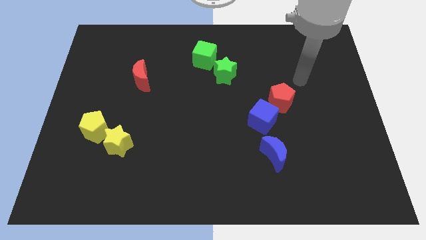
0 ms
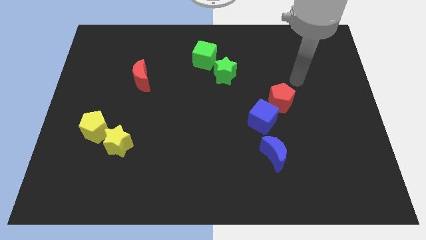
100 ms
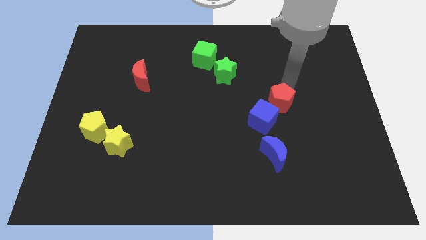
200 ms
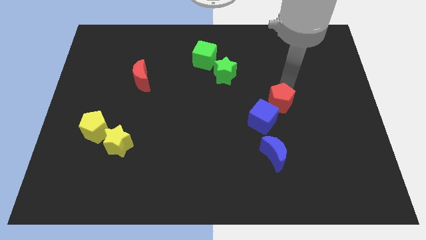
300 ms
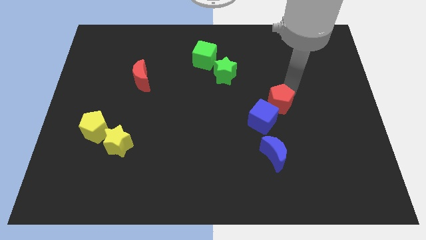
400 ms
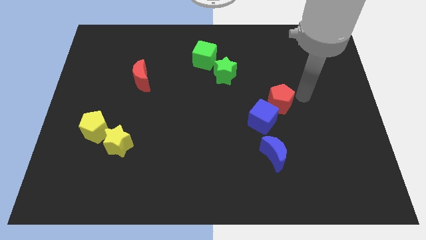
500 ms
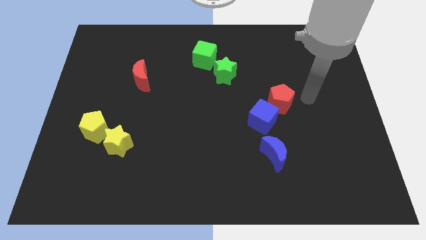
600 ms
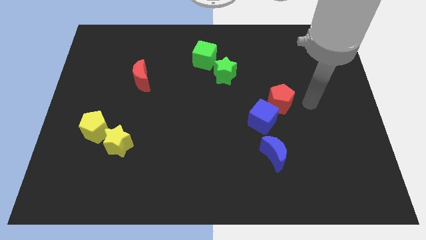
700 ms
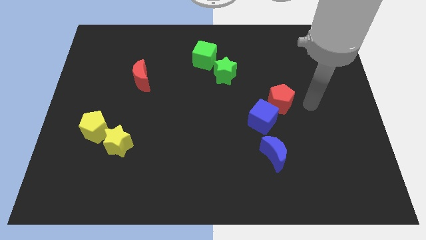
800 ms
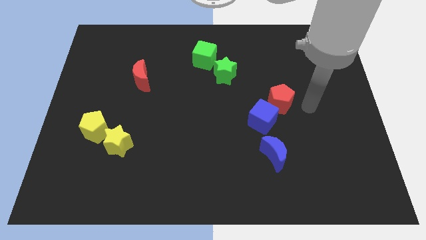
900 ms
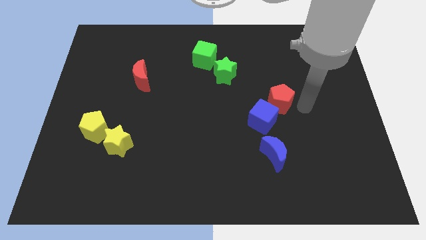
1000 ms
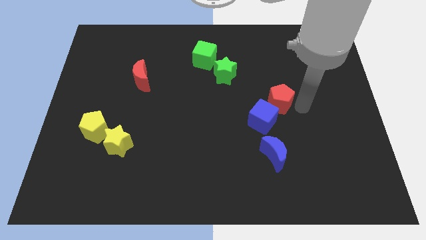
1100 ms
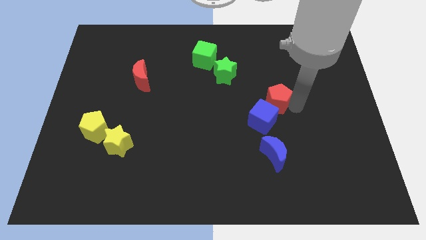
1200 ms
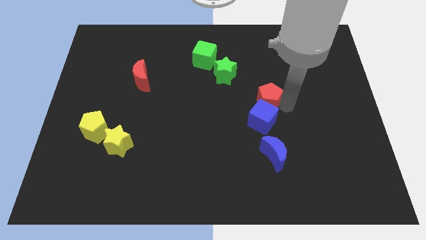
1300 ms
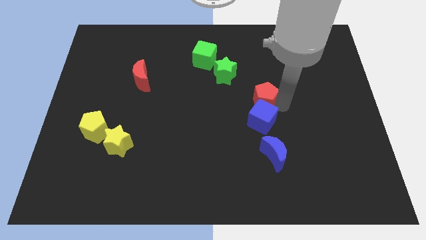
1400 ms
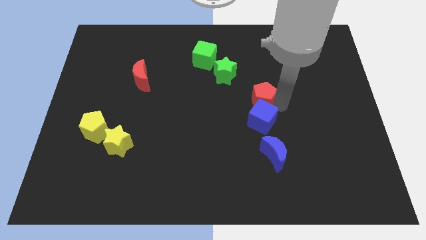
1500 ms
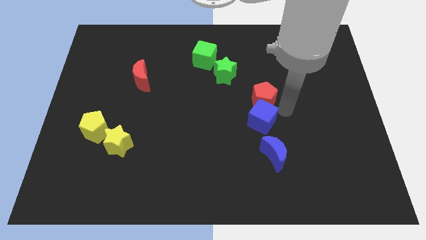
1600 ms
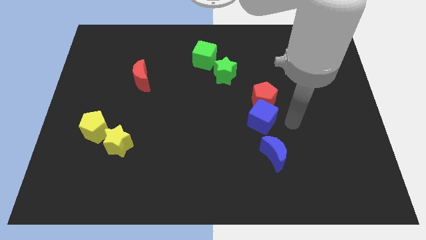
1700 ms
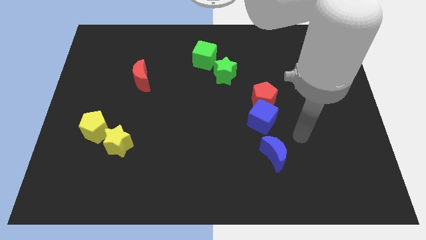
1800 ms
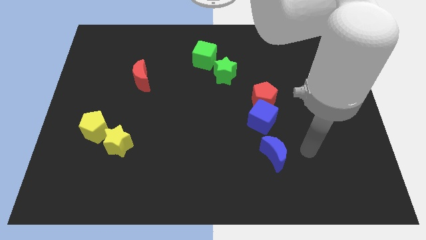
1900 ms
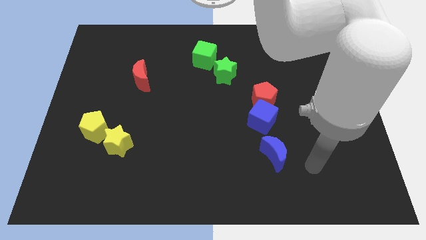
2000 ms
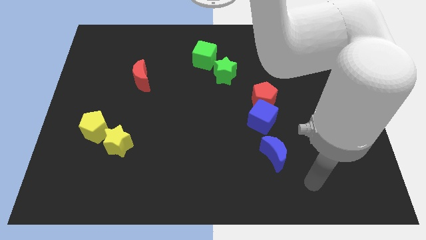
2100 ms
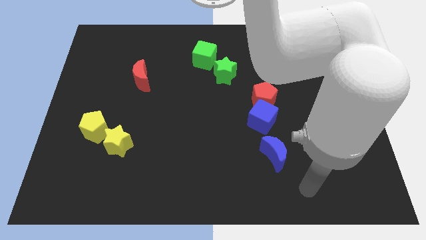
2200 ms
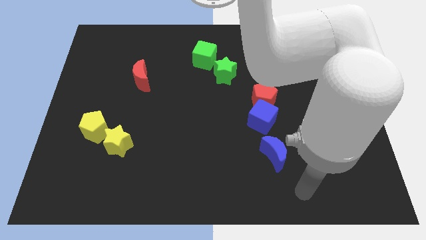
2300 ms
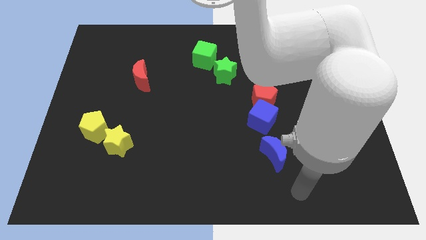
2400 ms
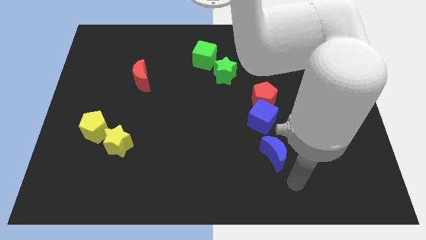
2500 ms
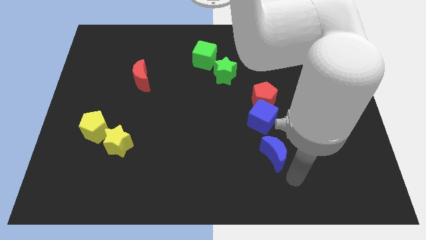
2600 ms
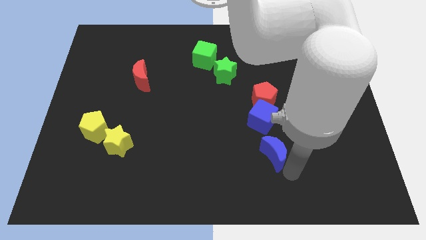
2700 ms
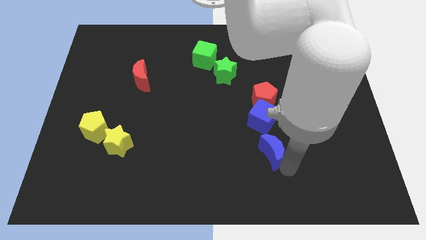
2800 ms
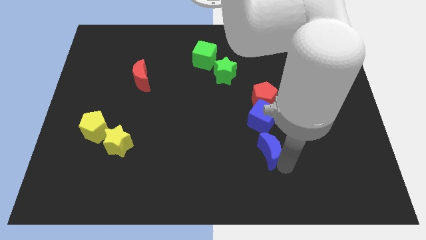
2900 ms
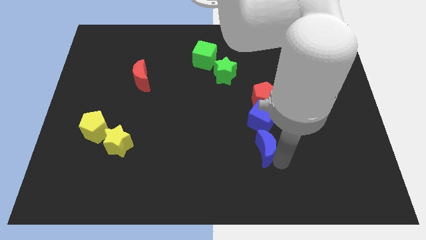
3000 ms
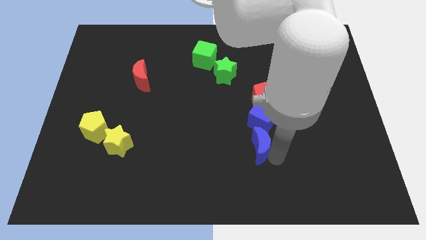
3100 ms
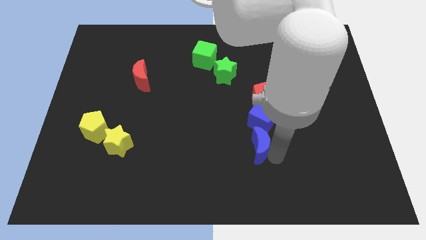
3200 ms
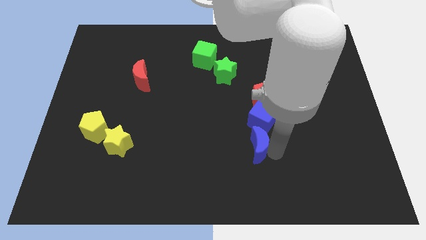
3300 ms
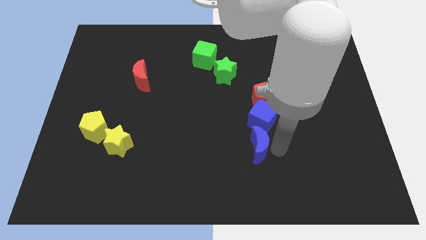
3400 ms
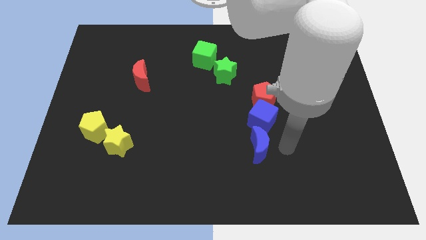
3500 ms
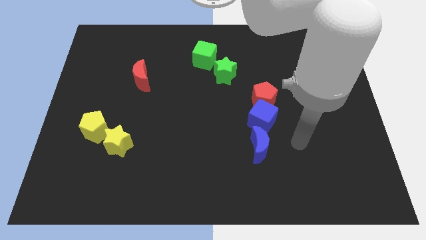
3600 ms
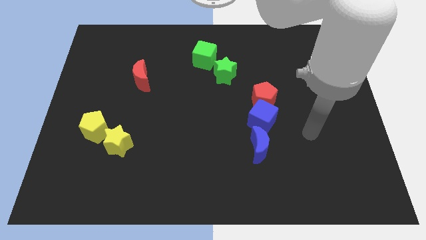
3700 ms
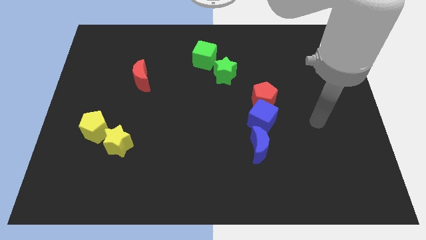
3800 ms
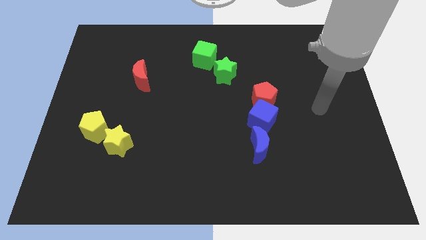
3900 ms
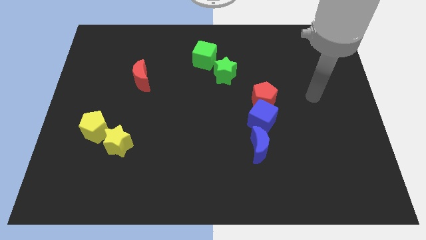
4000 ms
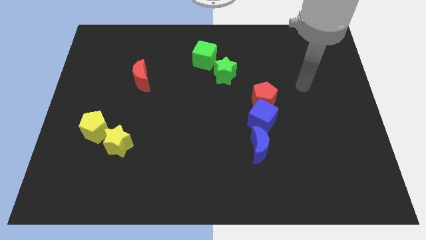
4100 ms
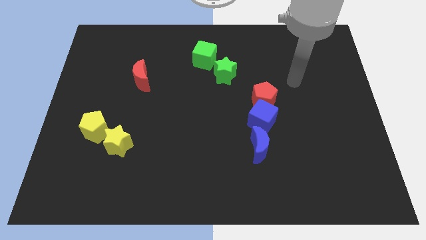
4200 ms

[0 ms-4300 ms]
adjust the red pentagon and the blue crescent to form a vertical line with blue cube

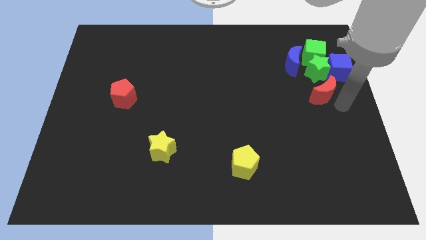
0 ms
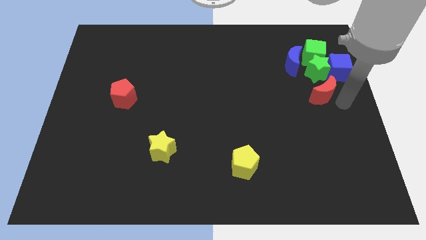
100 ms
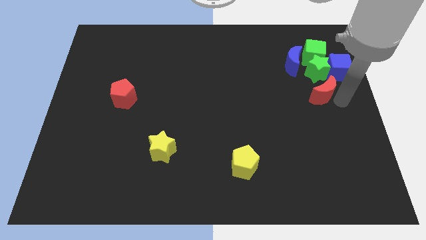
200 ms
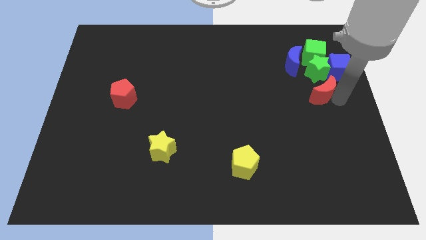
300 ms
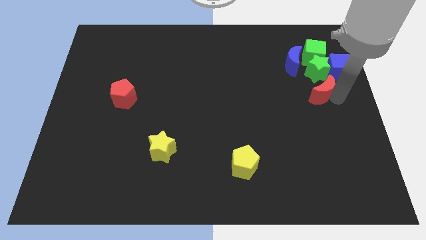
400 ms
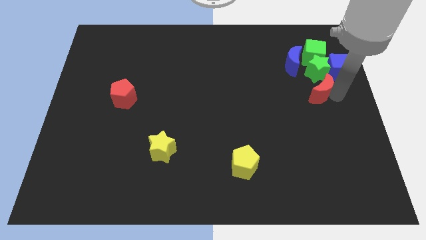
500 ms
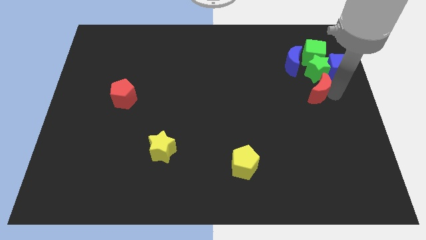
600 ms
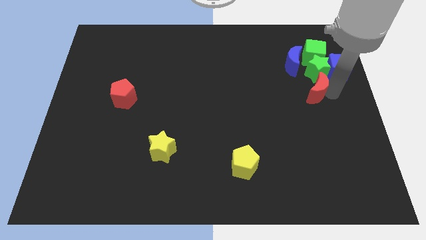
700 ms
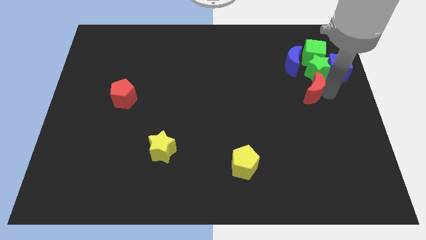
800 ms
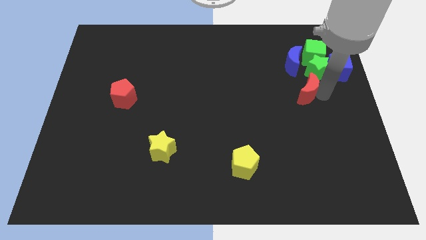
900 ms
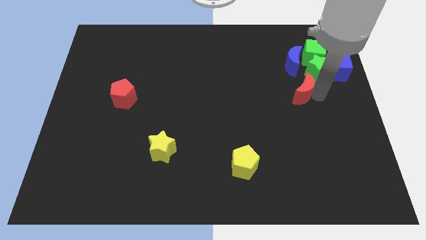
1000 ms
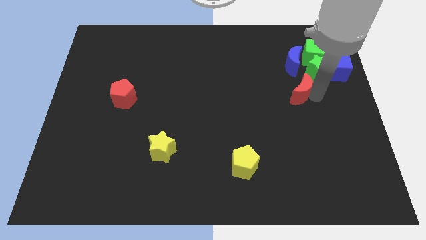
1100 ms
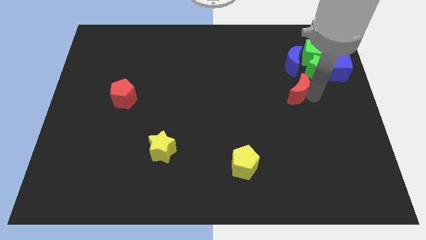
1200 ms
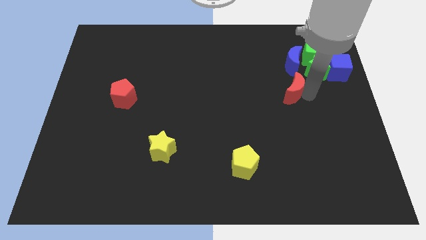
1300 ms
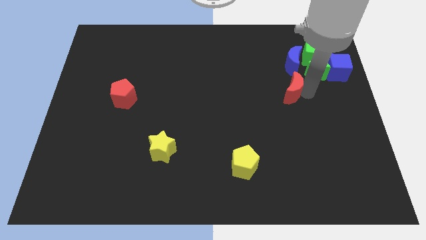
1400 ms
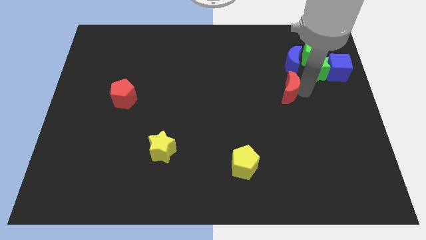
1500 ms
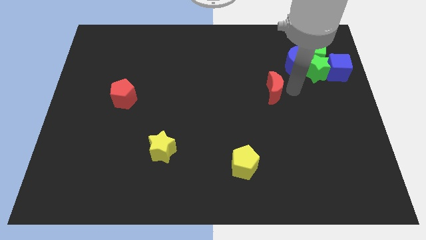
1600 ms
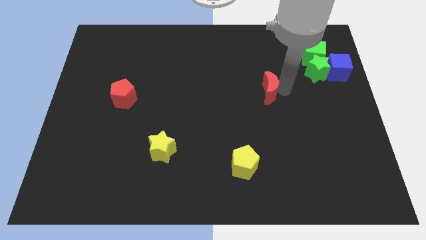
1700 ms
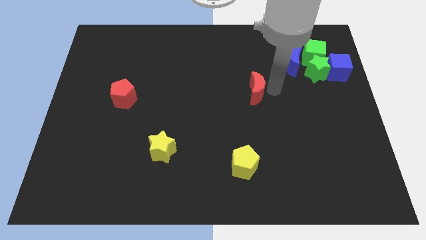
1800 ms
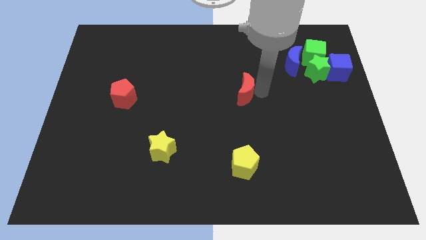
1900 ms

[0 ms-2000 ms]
move the red crescent away from the green star

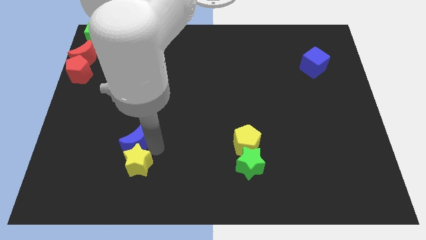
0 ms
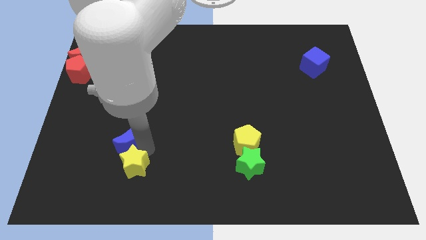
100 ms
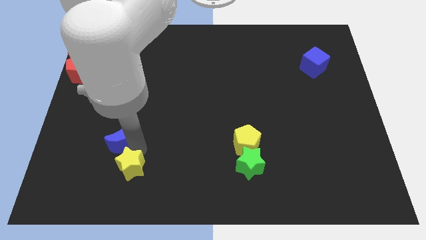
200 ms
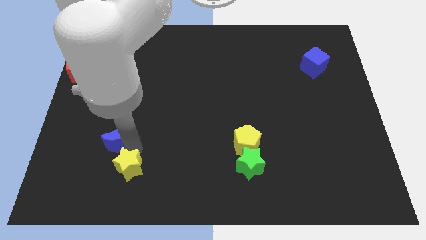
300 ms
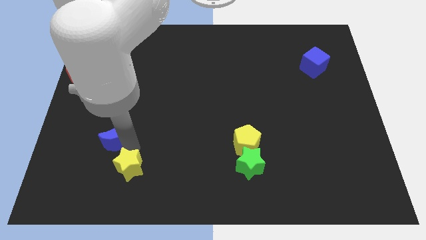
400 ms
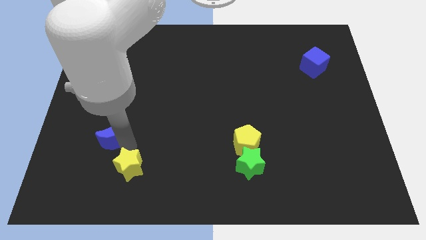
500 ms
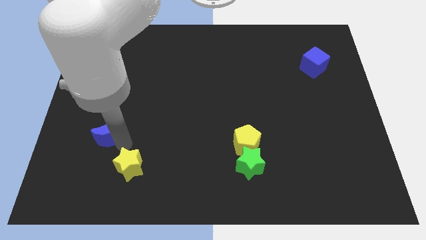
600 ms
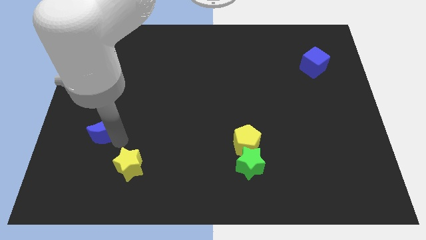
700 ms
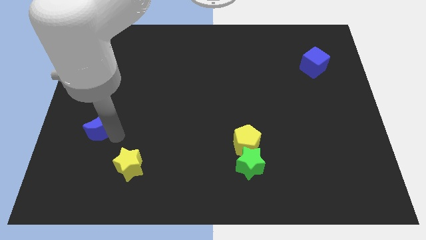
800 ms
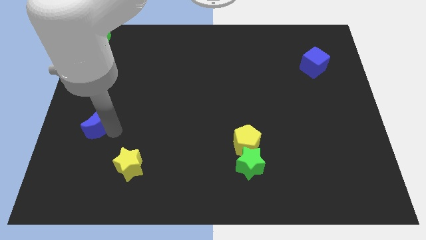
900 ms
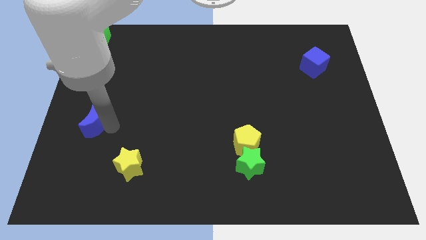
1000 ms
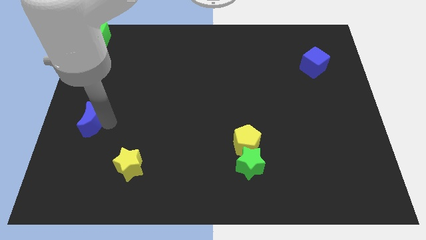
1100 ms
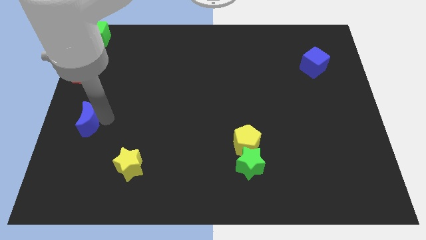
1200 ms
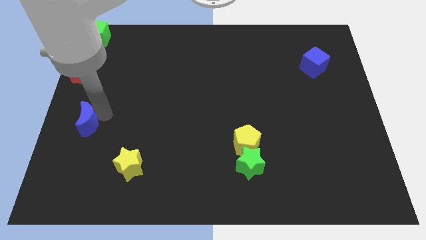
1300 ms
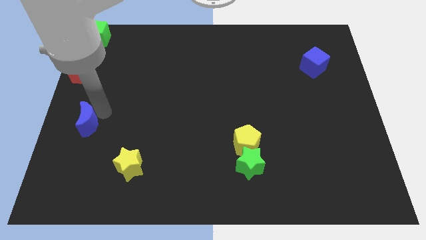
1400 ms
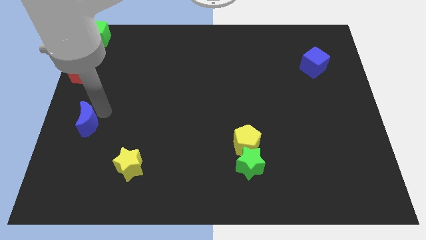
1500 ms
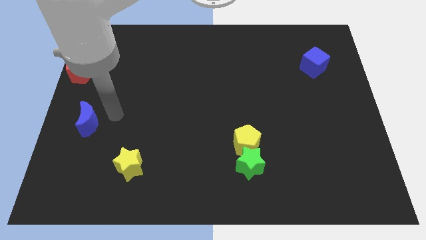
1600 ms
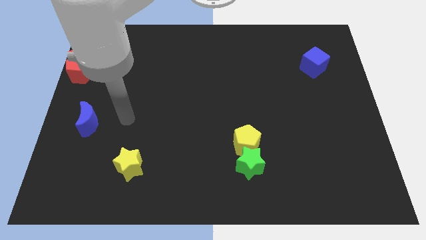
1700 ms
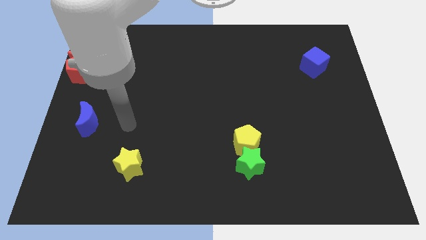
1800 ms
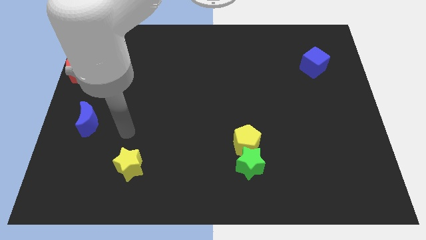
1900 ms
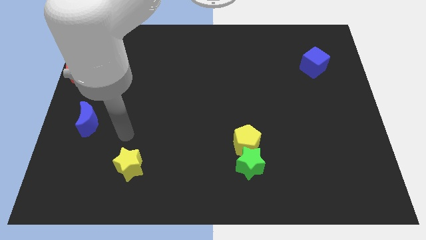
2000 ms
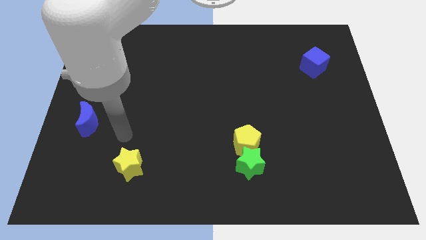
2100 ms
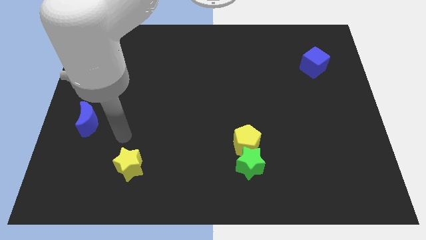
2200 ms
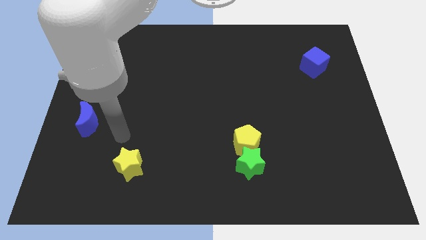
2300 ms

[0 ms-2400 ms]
separate the yellow star and the blue crescent

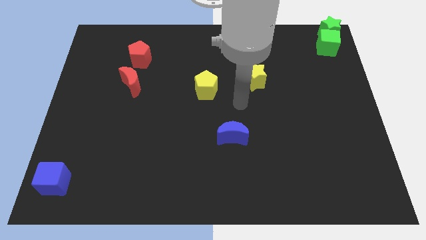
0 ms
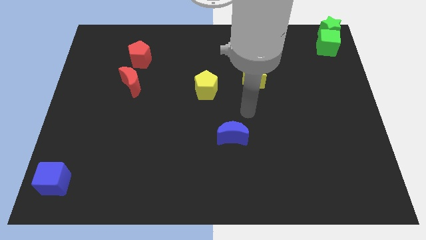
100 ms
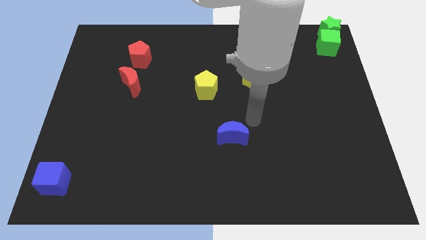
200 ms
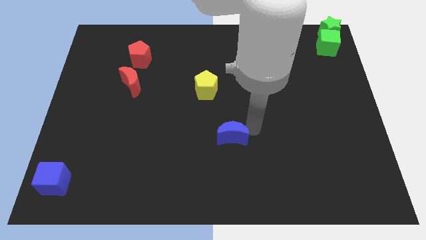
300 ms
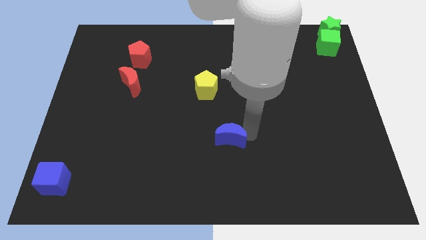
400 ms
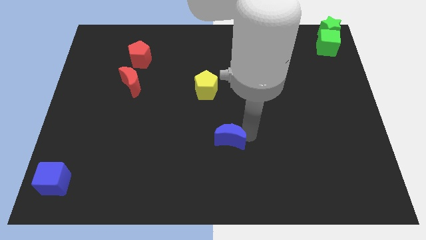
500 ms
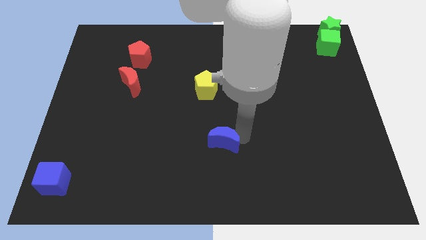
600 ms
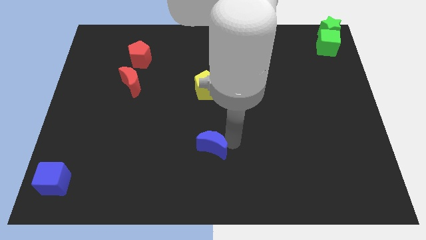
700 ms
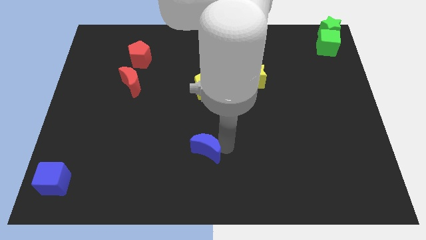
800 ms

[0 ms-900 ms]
move the blue crescent to the bottom of the yellow pentagon
